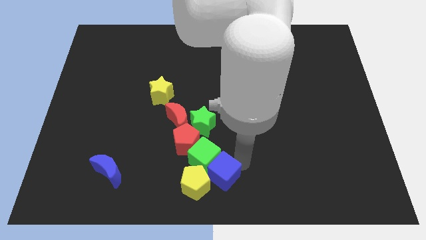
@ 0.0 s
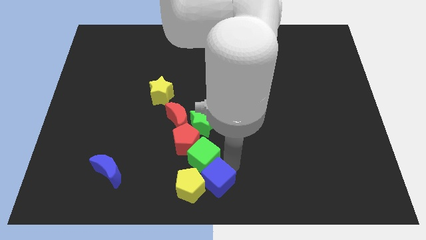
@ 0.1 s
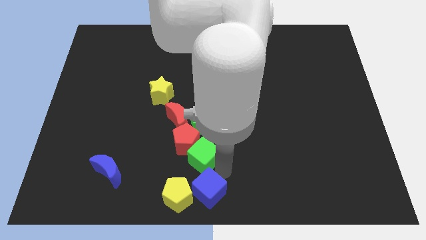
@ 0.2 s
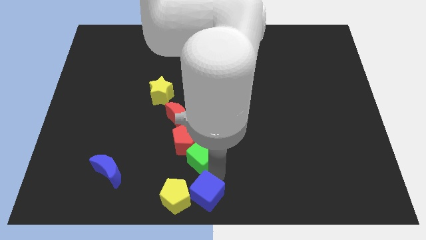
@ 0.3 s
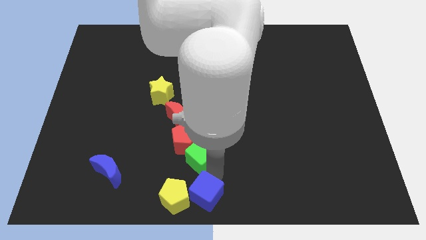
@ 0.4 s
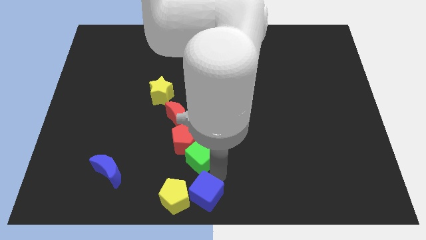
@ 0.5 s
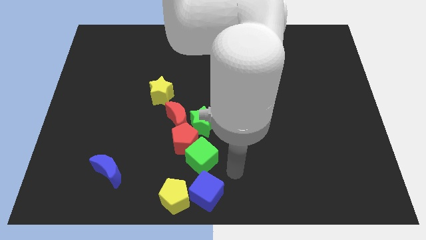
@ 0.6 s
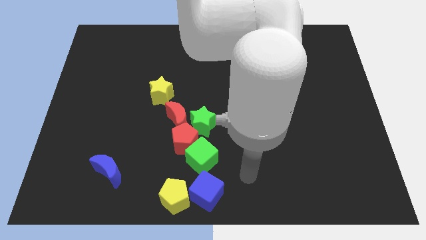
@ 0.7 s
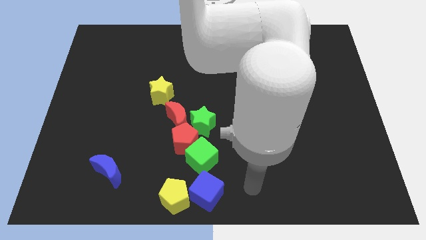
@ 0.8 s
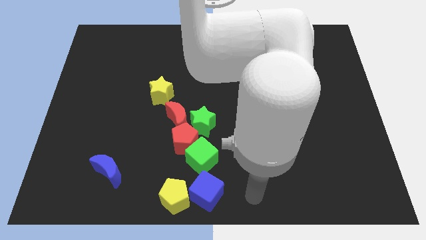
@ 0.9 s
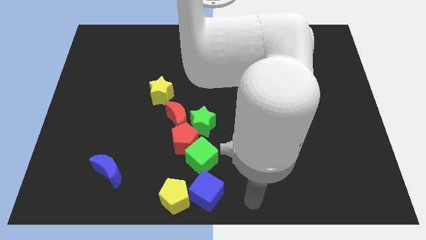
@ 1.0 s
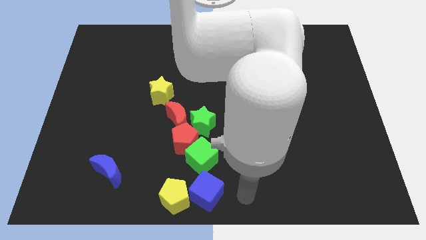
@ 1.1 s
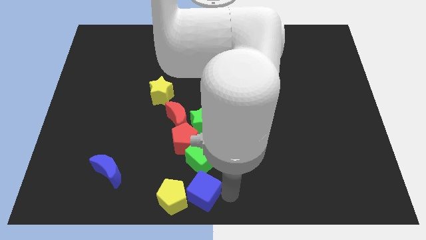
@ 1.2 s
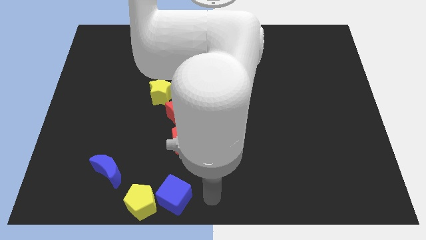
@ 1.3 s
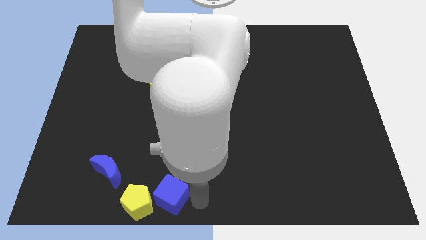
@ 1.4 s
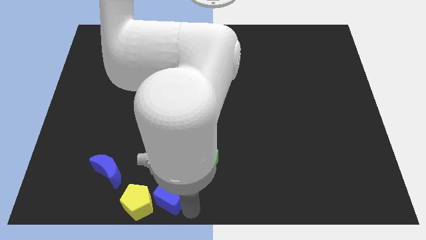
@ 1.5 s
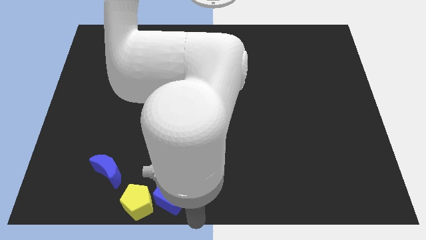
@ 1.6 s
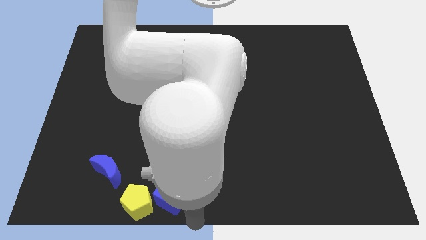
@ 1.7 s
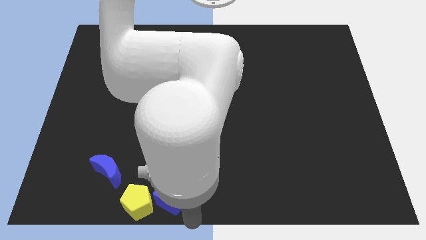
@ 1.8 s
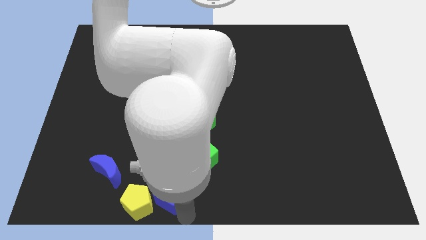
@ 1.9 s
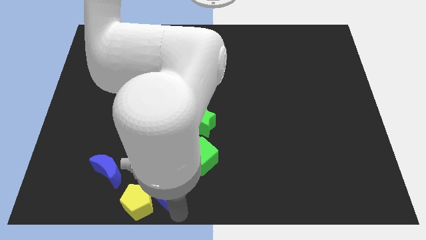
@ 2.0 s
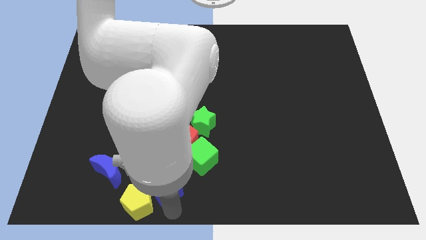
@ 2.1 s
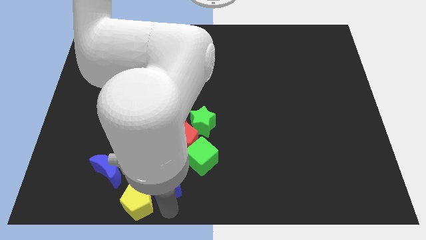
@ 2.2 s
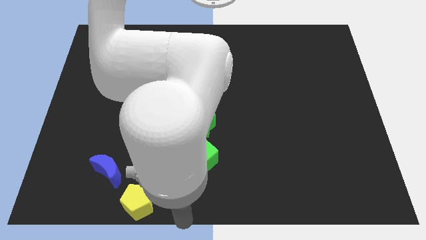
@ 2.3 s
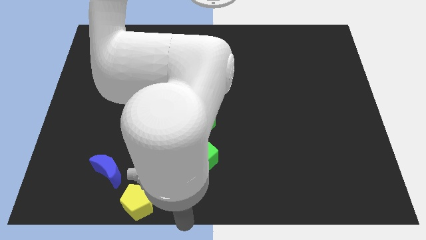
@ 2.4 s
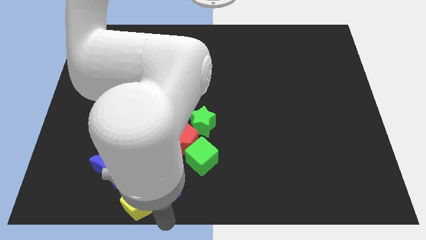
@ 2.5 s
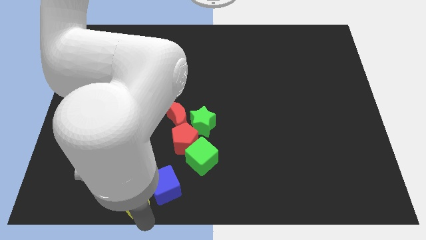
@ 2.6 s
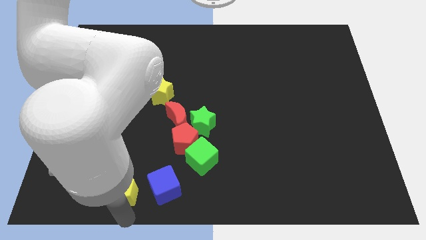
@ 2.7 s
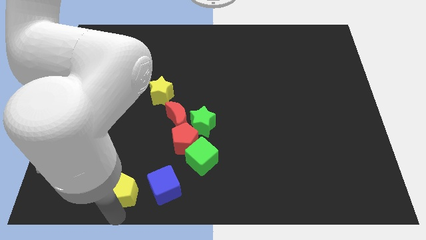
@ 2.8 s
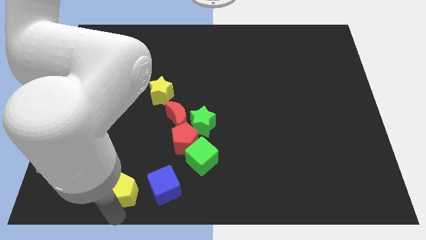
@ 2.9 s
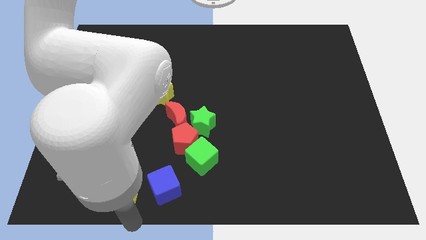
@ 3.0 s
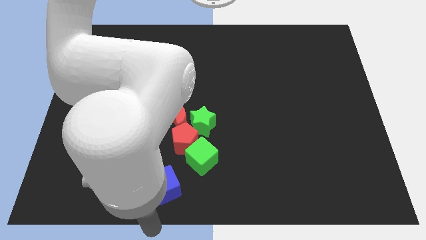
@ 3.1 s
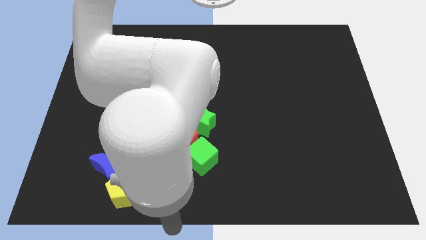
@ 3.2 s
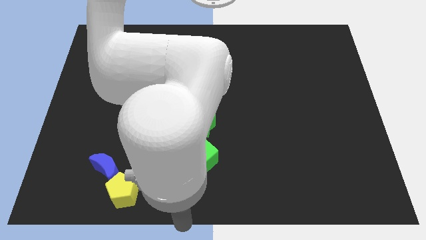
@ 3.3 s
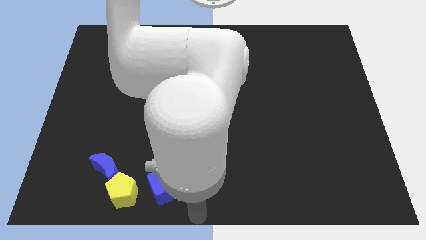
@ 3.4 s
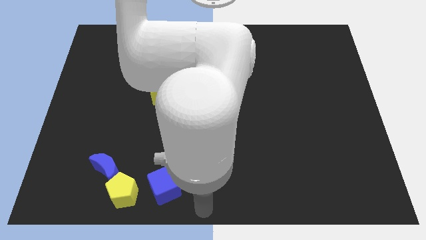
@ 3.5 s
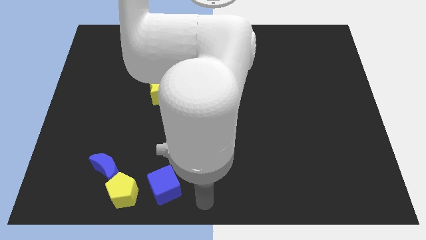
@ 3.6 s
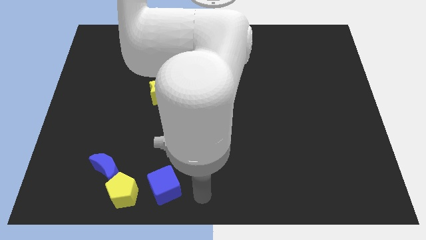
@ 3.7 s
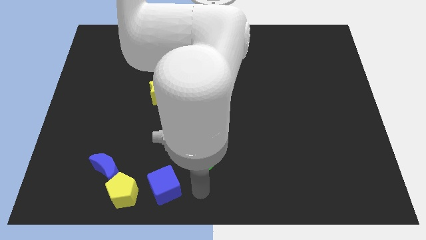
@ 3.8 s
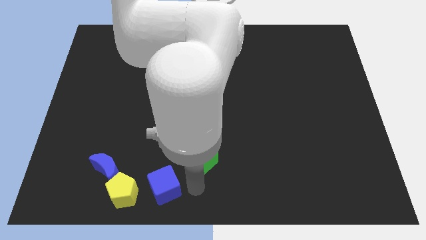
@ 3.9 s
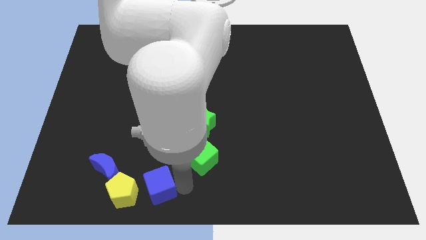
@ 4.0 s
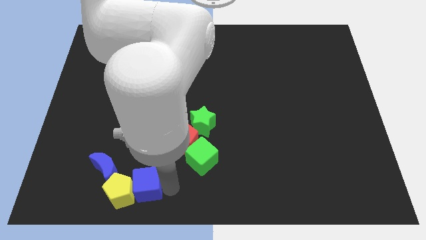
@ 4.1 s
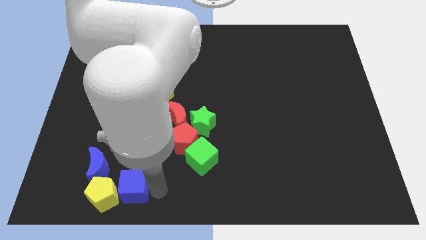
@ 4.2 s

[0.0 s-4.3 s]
move yellow pentagon and blue cube slightly left

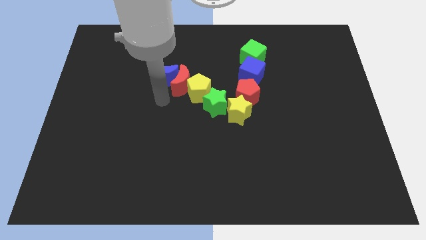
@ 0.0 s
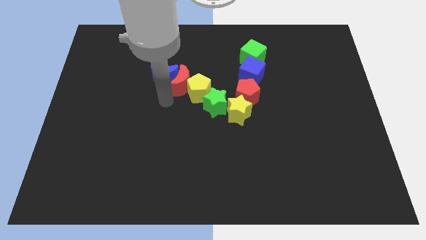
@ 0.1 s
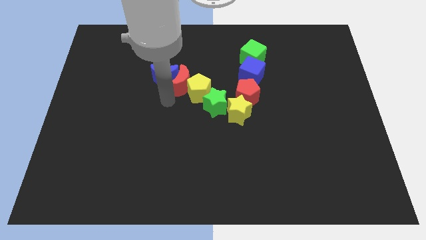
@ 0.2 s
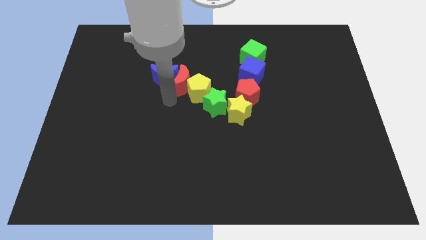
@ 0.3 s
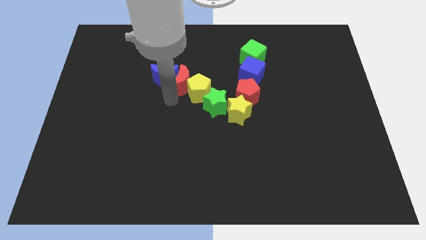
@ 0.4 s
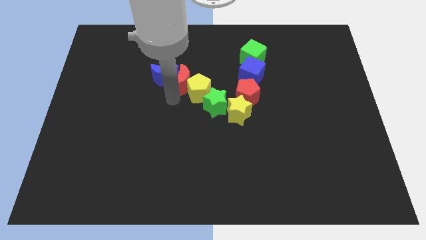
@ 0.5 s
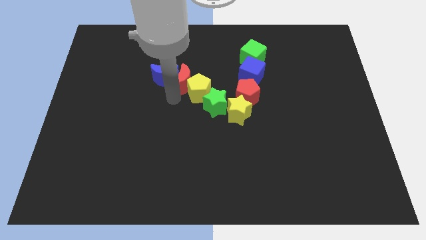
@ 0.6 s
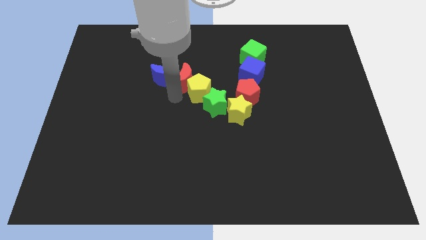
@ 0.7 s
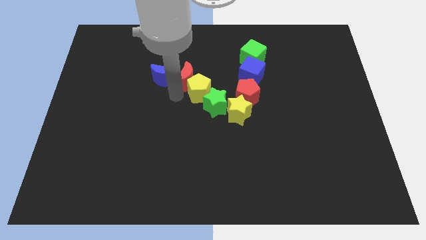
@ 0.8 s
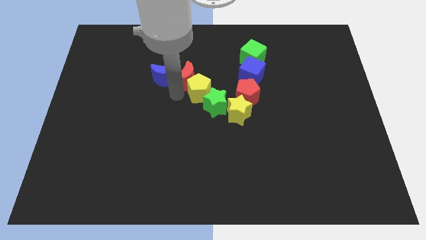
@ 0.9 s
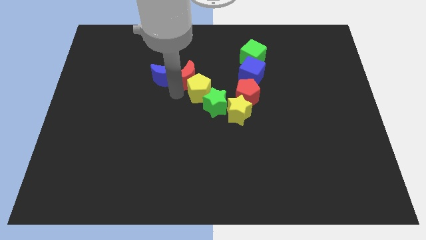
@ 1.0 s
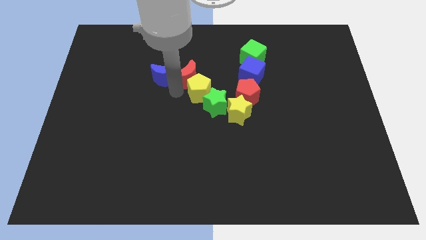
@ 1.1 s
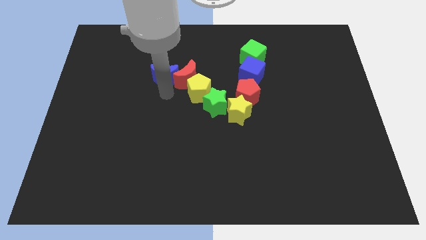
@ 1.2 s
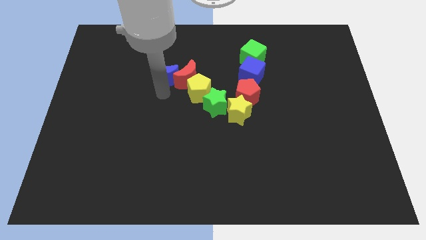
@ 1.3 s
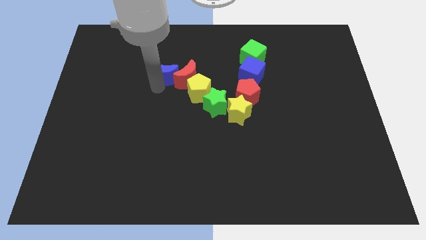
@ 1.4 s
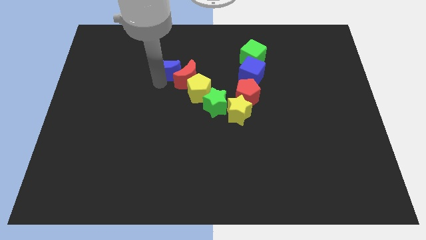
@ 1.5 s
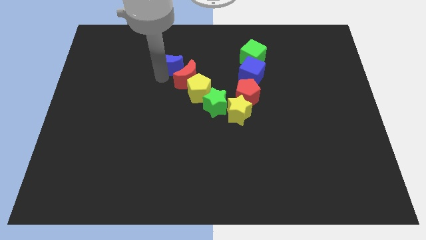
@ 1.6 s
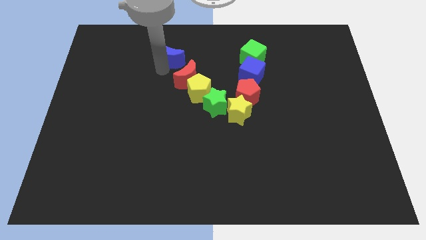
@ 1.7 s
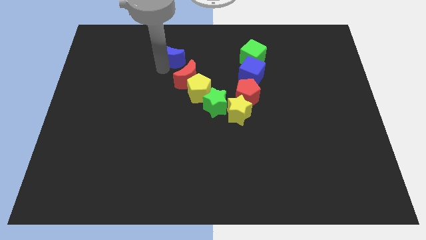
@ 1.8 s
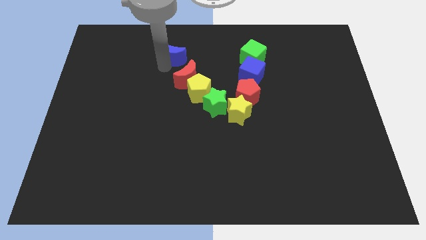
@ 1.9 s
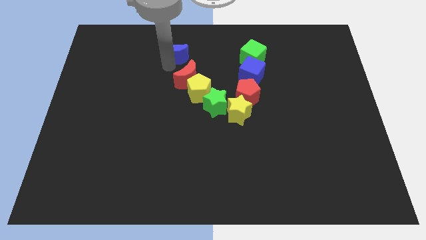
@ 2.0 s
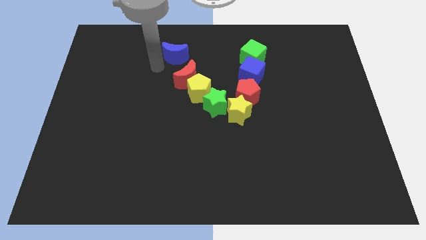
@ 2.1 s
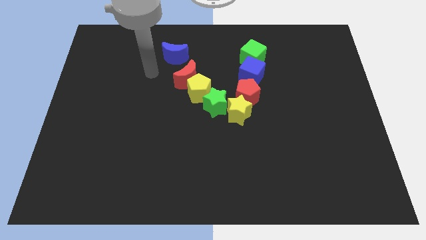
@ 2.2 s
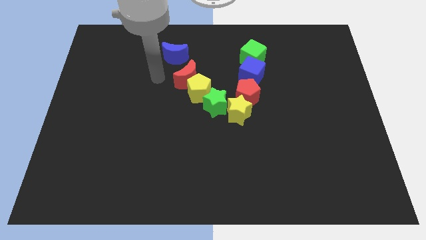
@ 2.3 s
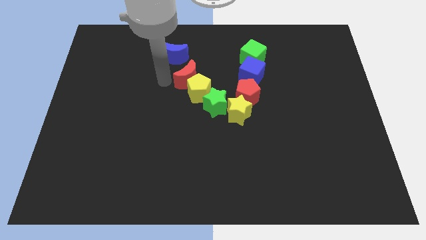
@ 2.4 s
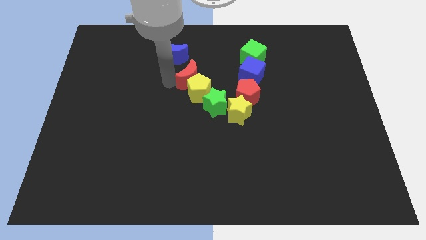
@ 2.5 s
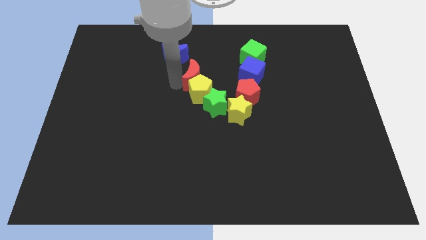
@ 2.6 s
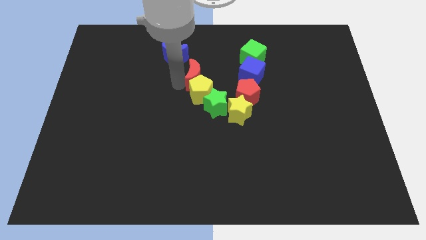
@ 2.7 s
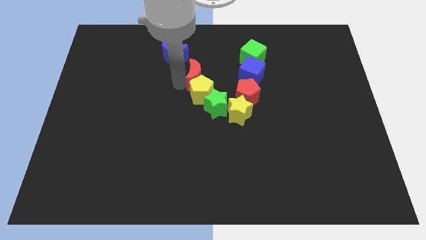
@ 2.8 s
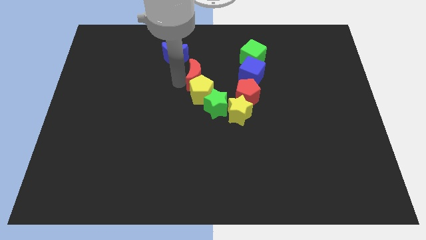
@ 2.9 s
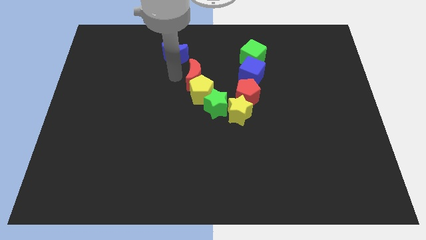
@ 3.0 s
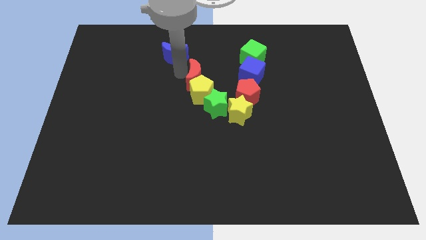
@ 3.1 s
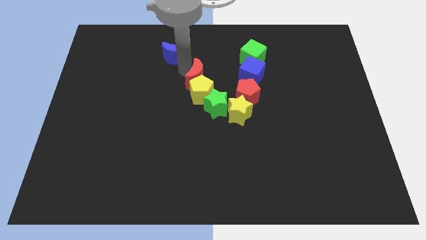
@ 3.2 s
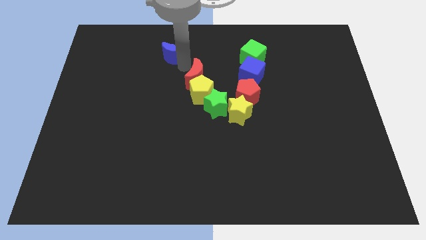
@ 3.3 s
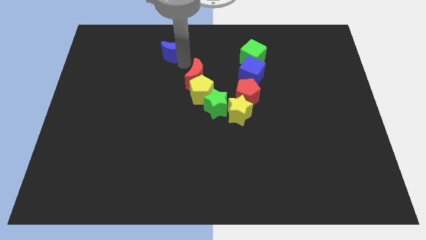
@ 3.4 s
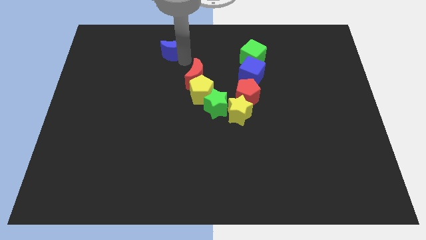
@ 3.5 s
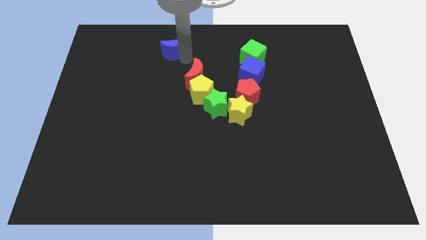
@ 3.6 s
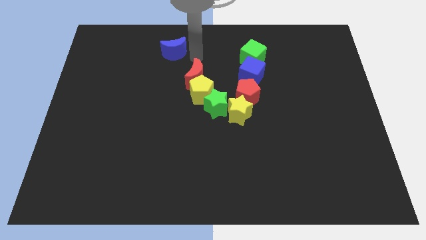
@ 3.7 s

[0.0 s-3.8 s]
move the blue moon away from the left side of the red crescent

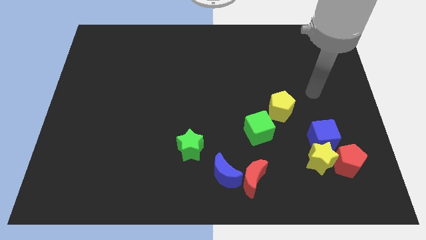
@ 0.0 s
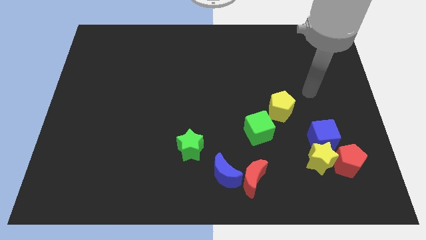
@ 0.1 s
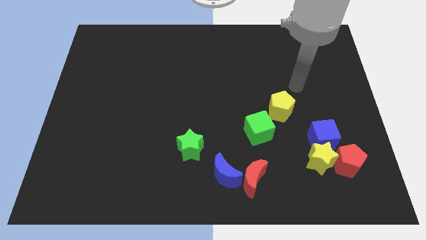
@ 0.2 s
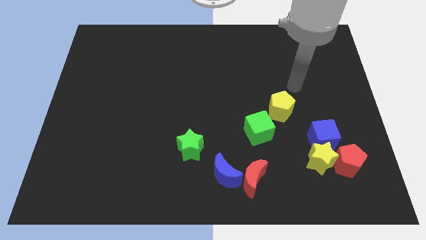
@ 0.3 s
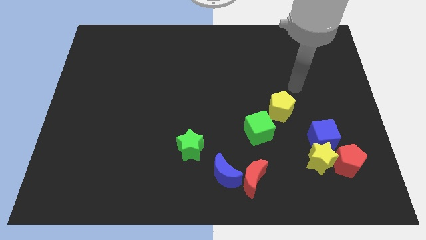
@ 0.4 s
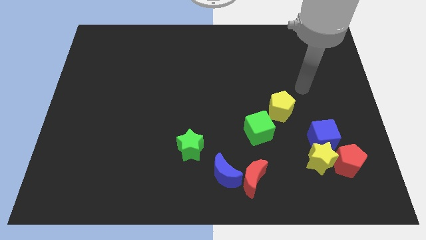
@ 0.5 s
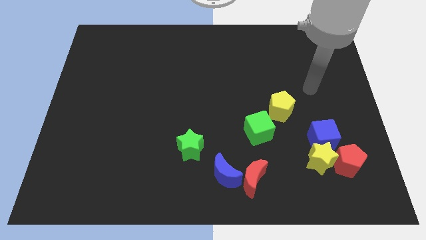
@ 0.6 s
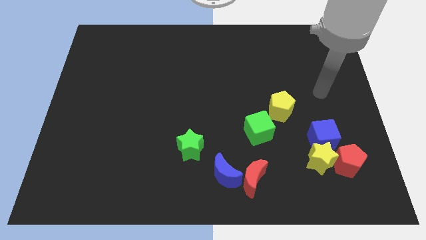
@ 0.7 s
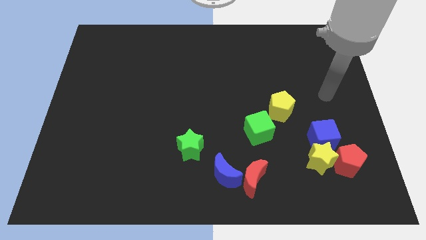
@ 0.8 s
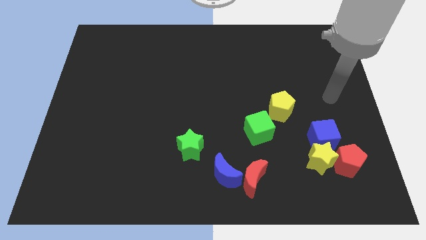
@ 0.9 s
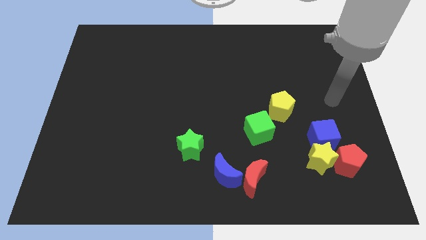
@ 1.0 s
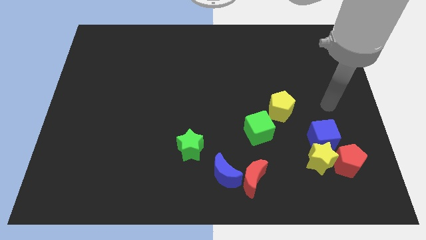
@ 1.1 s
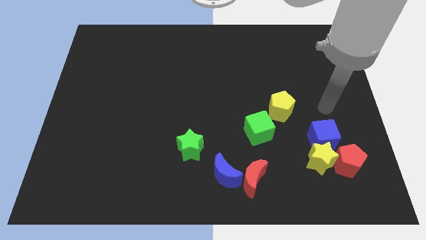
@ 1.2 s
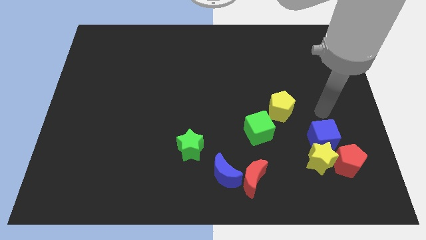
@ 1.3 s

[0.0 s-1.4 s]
point your arm at the top of the blue cube
